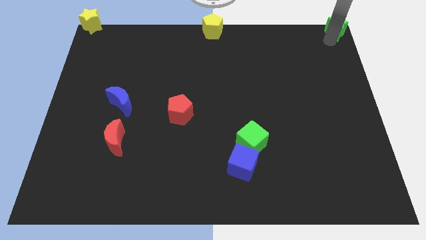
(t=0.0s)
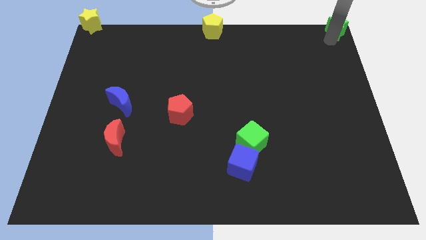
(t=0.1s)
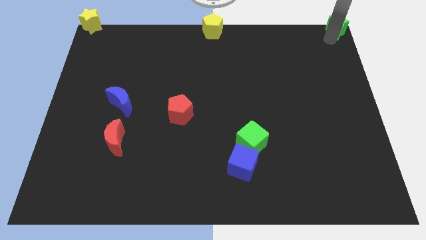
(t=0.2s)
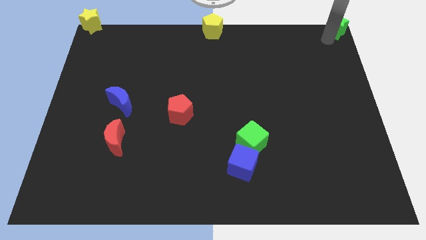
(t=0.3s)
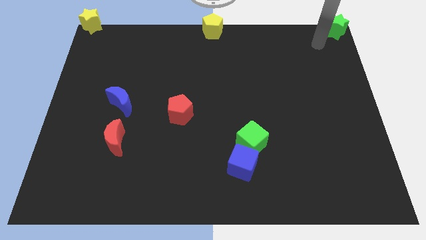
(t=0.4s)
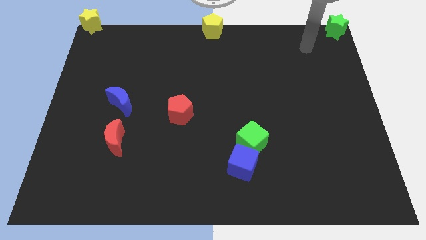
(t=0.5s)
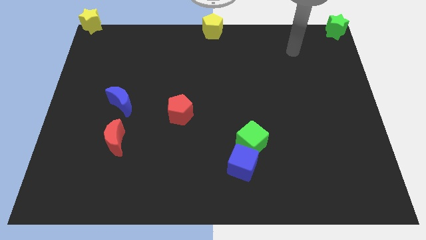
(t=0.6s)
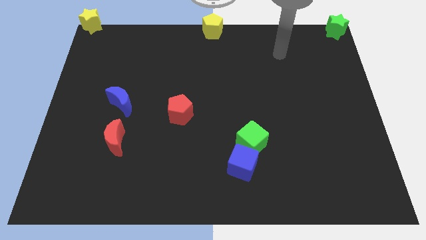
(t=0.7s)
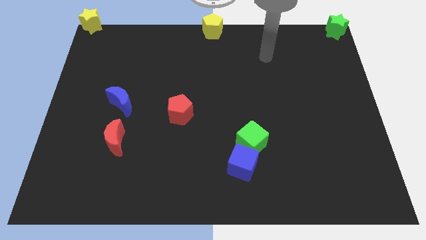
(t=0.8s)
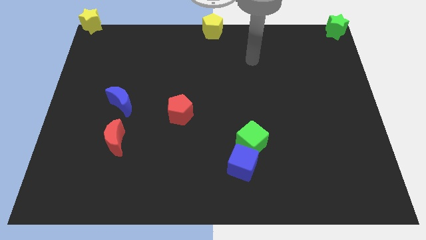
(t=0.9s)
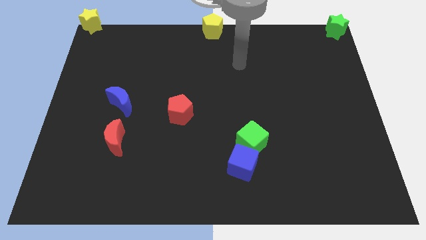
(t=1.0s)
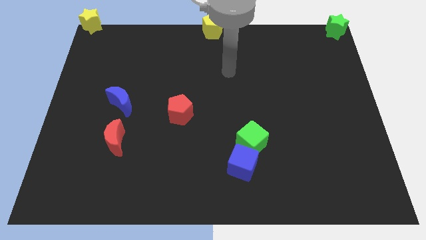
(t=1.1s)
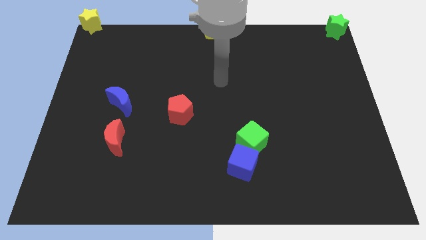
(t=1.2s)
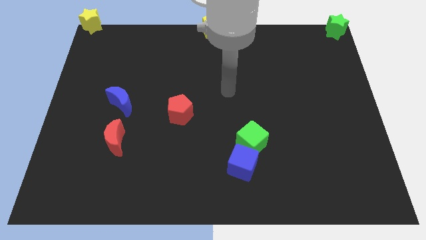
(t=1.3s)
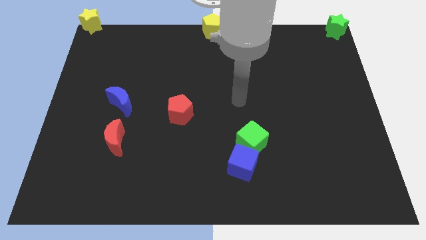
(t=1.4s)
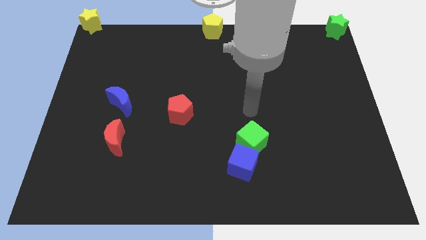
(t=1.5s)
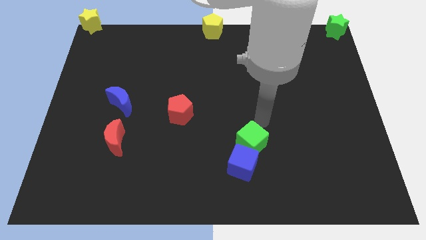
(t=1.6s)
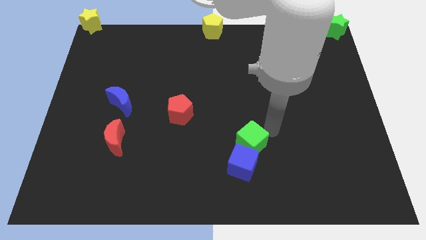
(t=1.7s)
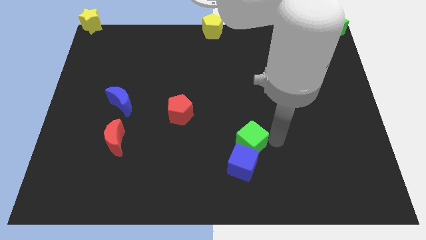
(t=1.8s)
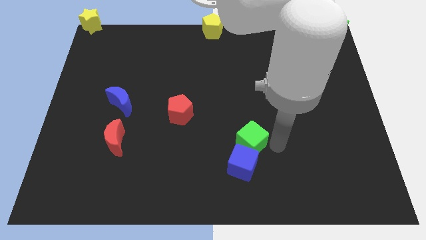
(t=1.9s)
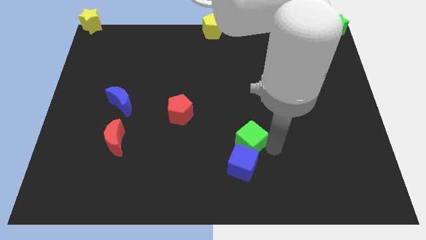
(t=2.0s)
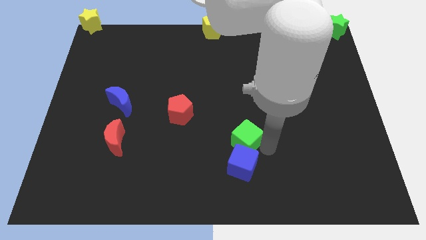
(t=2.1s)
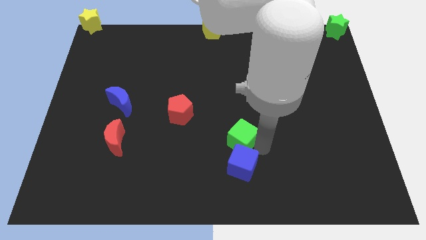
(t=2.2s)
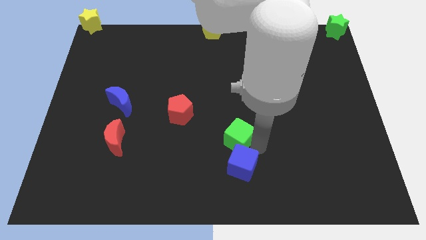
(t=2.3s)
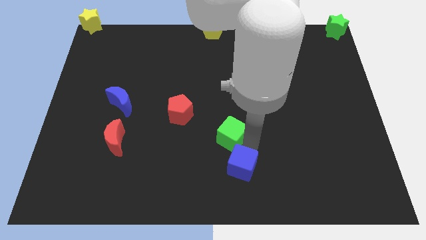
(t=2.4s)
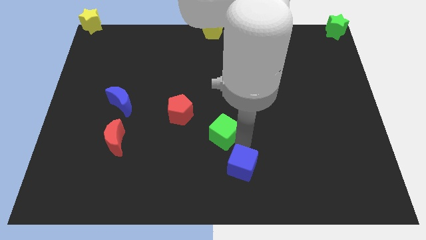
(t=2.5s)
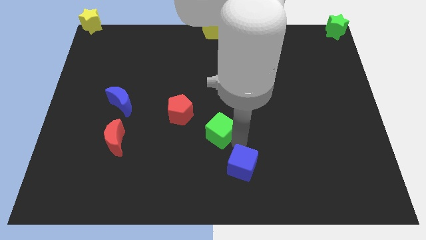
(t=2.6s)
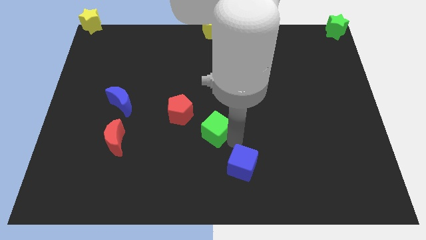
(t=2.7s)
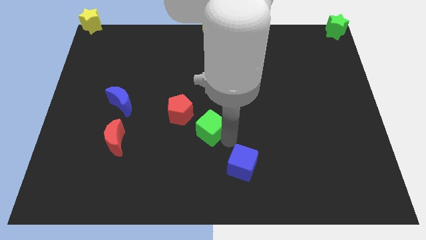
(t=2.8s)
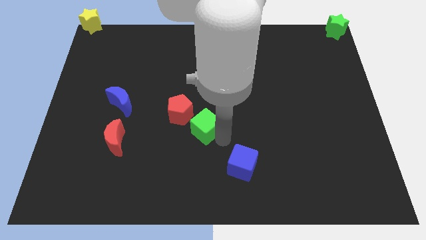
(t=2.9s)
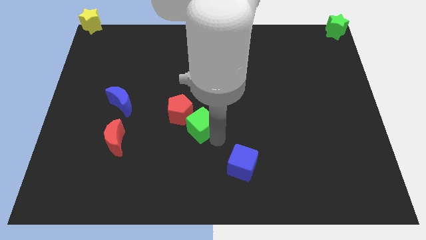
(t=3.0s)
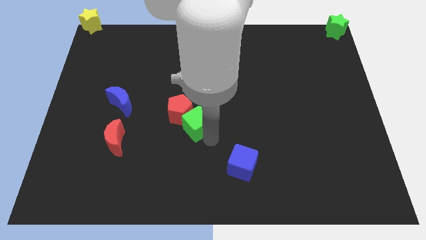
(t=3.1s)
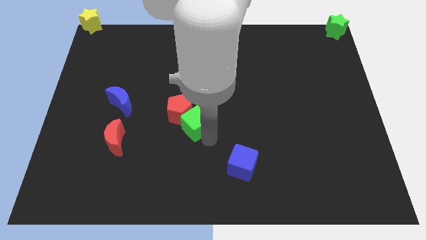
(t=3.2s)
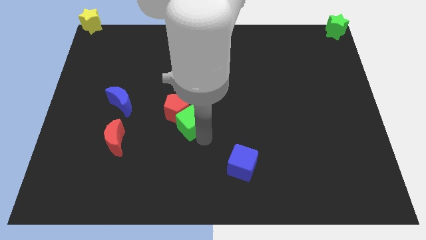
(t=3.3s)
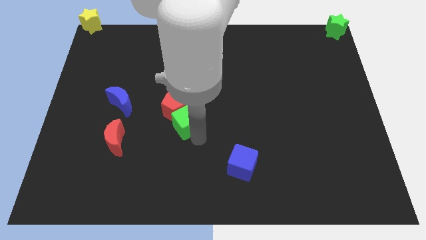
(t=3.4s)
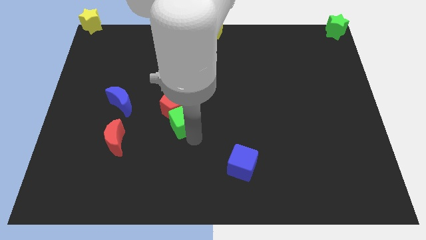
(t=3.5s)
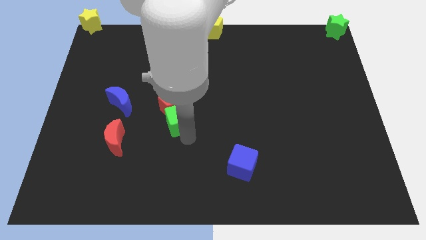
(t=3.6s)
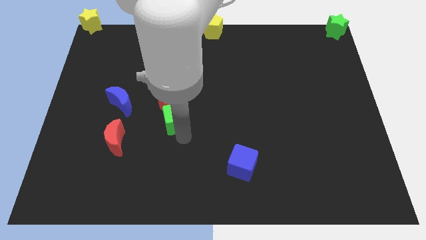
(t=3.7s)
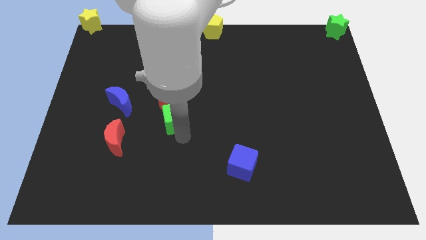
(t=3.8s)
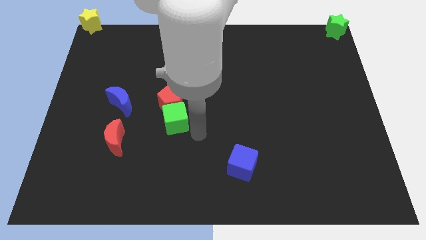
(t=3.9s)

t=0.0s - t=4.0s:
push the green cube into the red pentagon

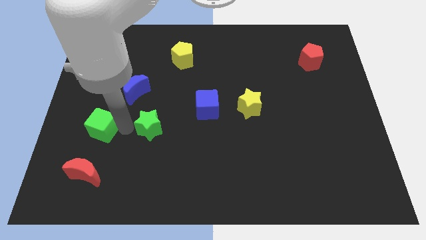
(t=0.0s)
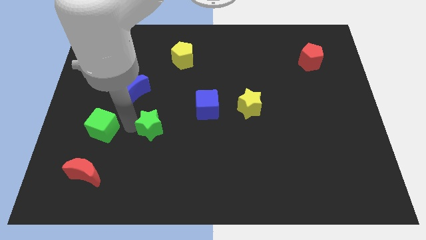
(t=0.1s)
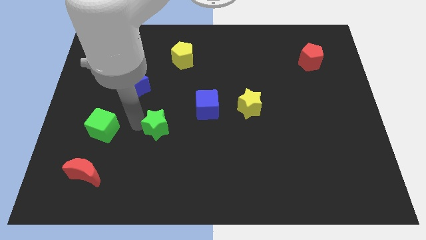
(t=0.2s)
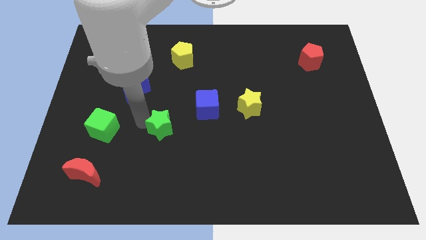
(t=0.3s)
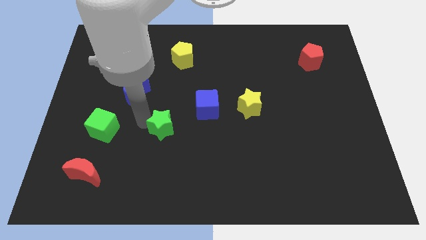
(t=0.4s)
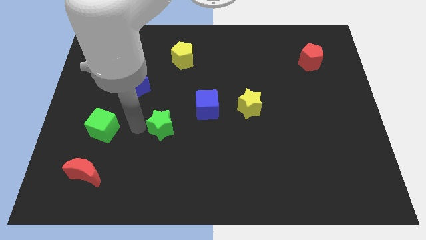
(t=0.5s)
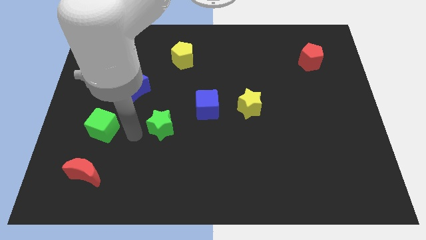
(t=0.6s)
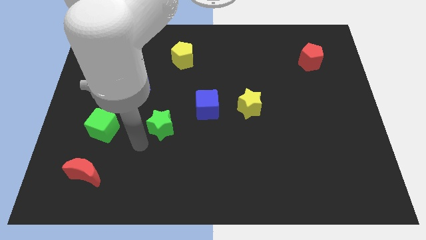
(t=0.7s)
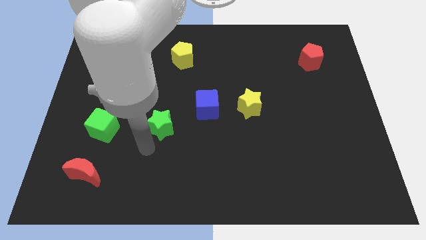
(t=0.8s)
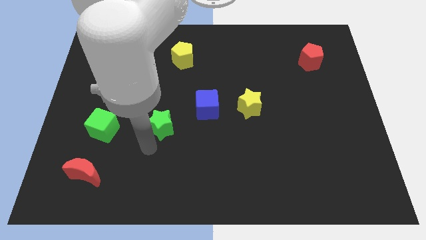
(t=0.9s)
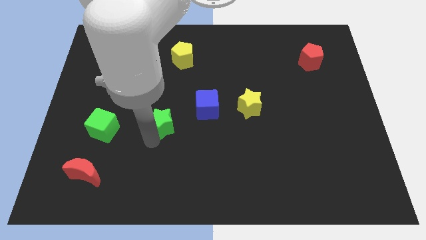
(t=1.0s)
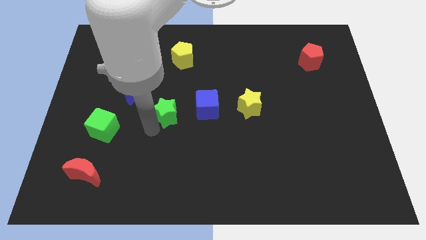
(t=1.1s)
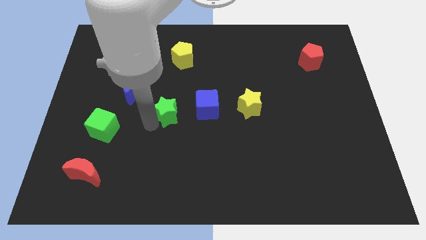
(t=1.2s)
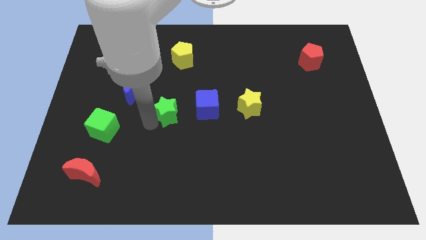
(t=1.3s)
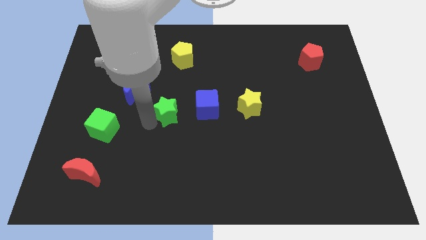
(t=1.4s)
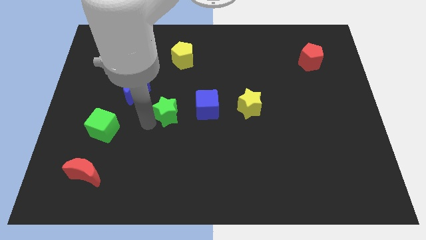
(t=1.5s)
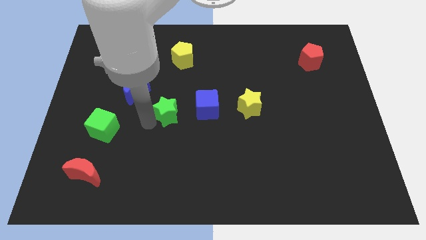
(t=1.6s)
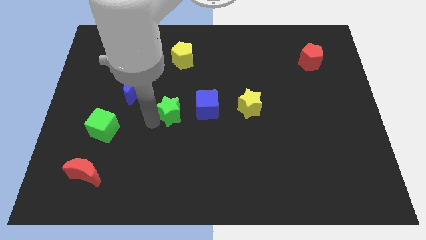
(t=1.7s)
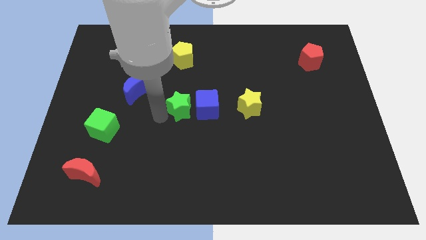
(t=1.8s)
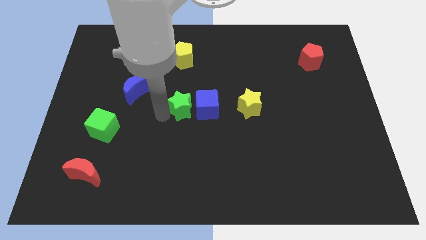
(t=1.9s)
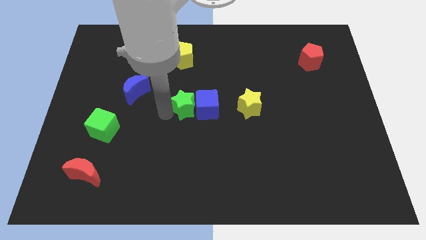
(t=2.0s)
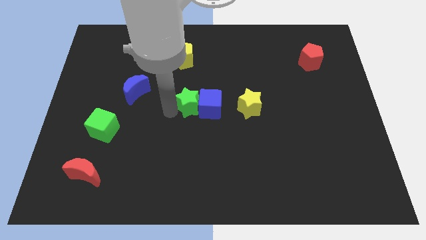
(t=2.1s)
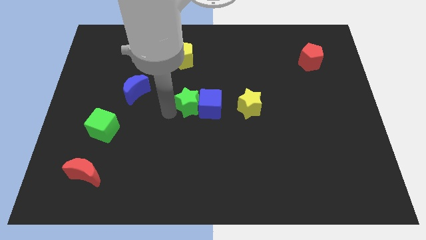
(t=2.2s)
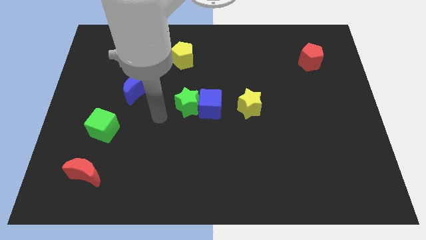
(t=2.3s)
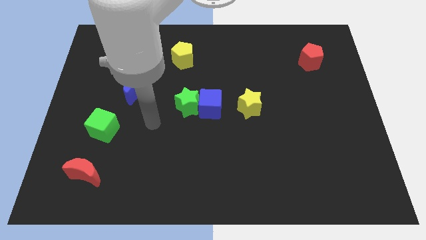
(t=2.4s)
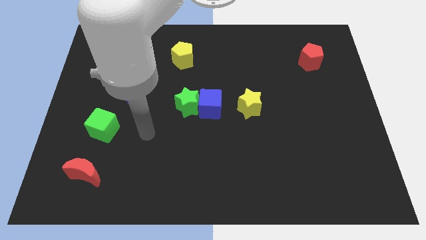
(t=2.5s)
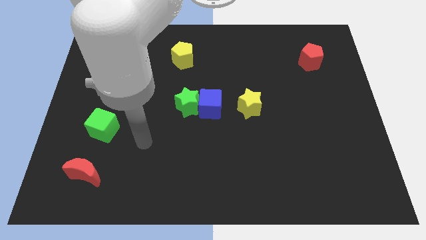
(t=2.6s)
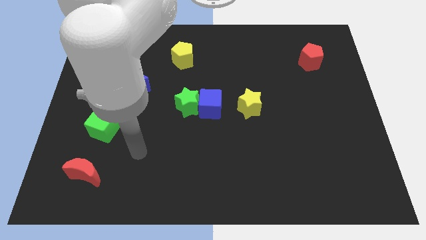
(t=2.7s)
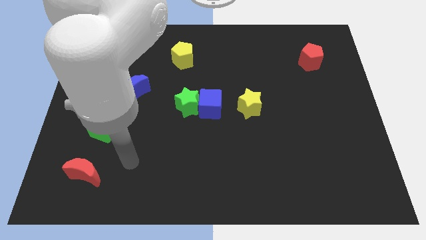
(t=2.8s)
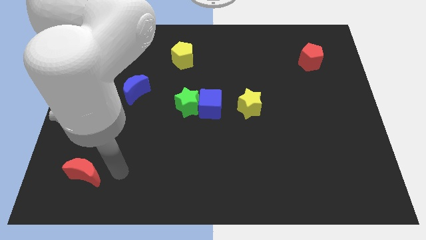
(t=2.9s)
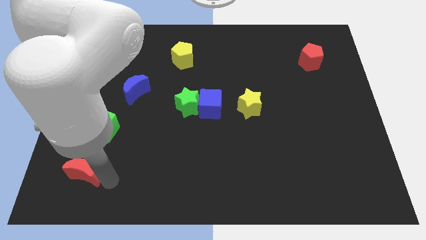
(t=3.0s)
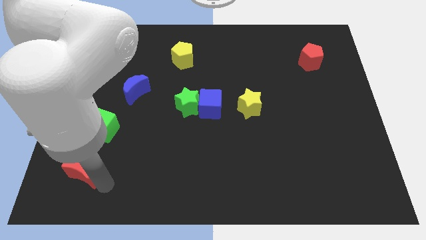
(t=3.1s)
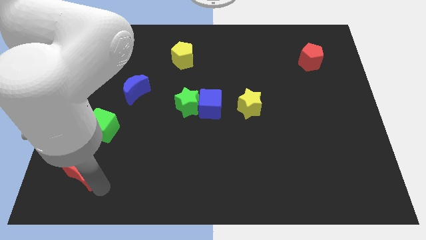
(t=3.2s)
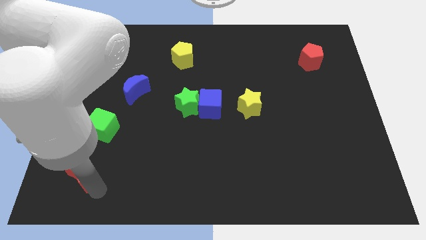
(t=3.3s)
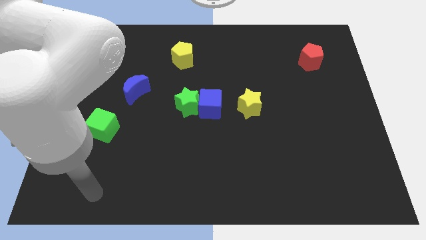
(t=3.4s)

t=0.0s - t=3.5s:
move the green star to the left side of the blue cube

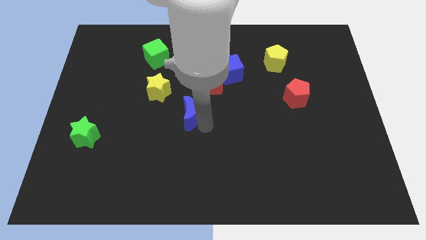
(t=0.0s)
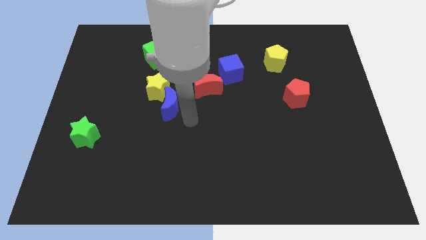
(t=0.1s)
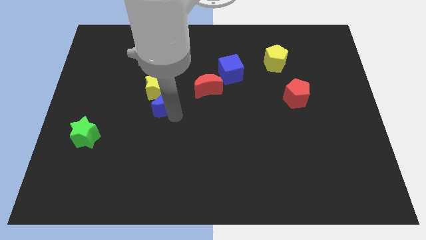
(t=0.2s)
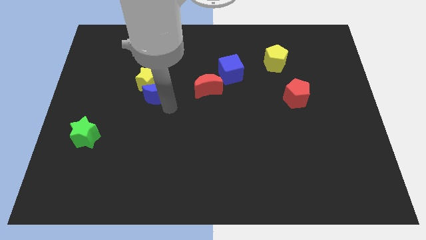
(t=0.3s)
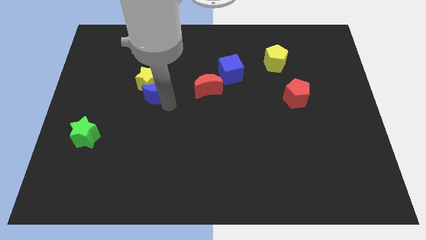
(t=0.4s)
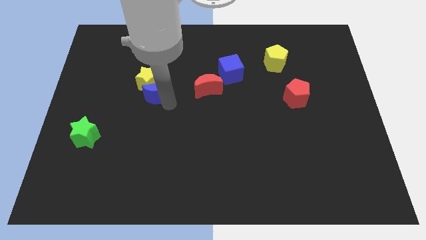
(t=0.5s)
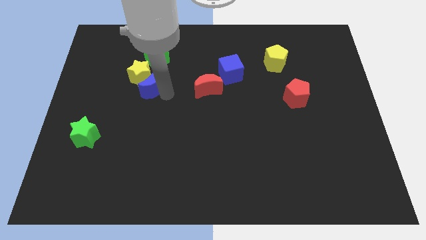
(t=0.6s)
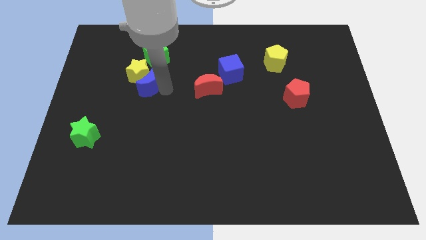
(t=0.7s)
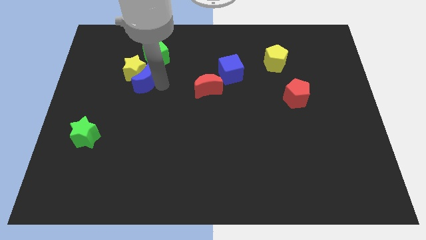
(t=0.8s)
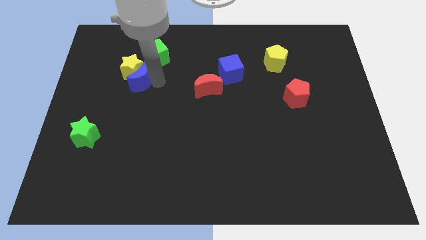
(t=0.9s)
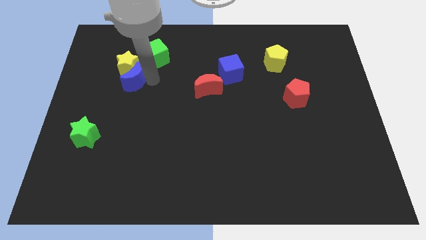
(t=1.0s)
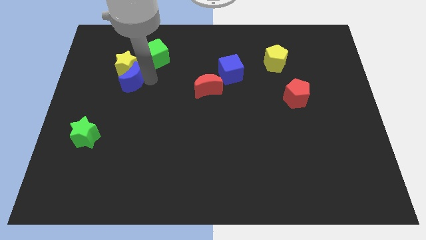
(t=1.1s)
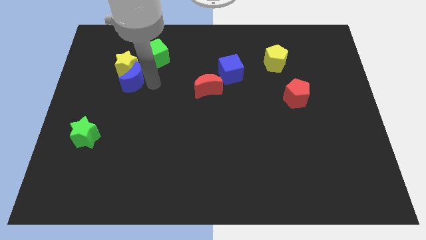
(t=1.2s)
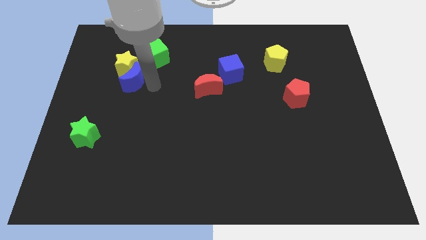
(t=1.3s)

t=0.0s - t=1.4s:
push the blue moon into the yellow star
